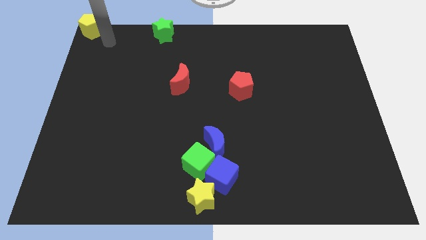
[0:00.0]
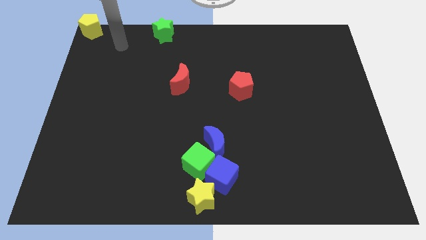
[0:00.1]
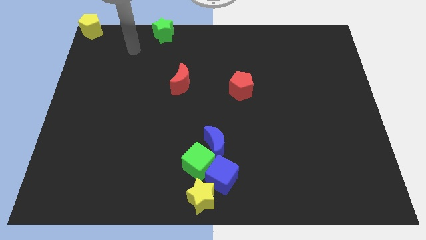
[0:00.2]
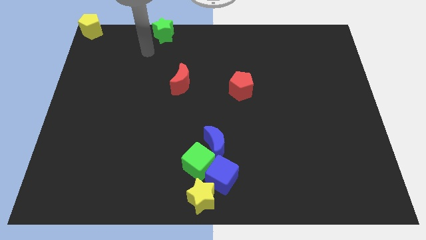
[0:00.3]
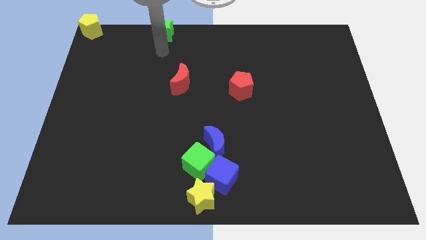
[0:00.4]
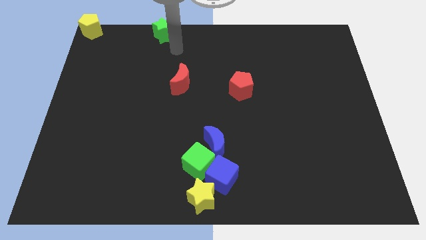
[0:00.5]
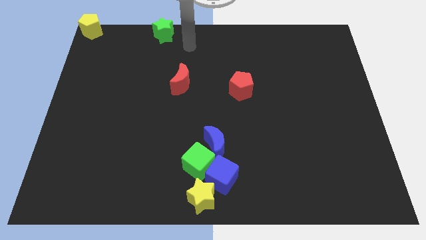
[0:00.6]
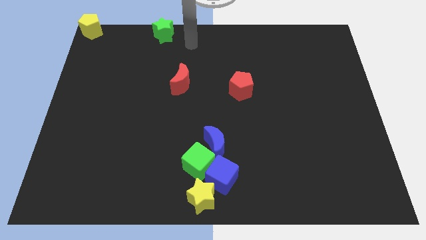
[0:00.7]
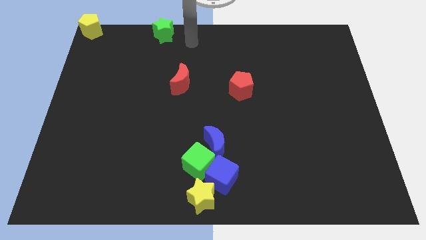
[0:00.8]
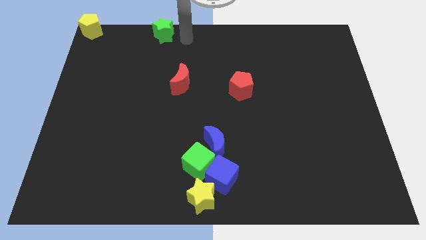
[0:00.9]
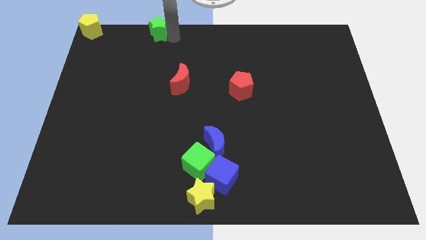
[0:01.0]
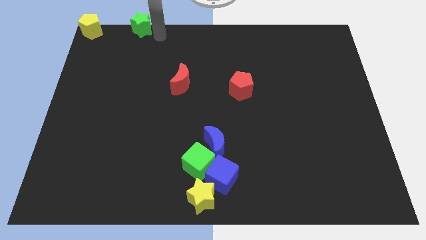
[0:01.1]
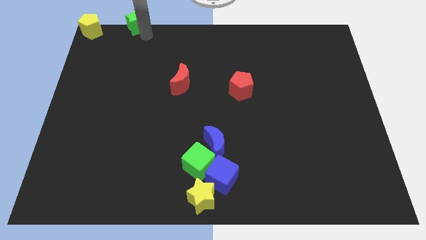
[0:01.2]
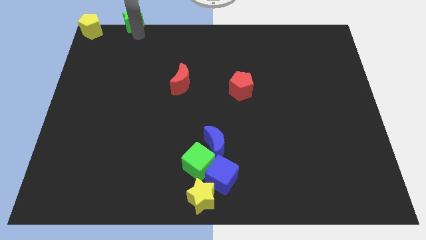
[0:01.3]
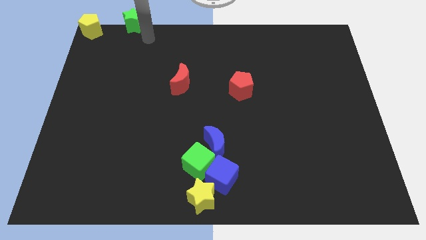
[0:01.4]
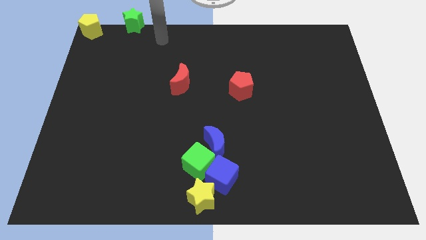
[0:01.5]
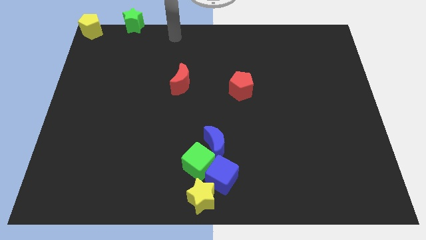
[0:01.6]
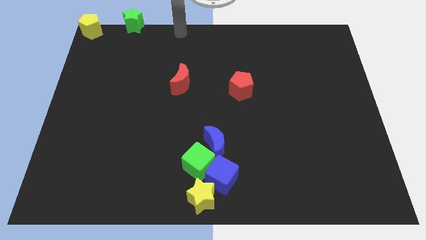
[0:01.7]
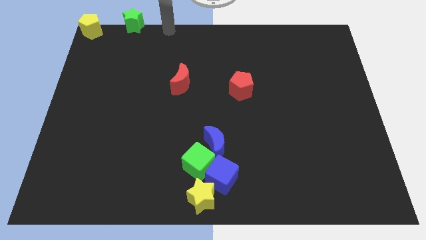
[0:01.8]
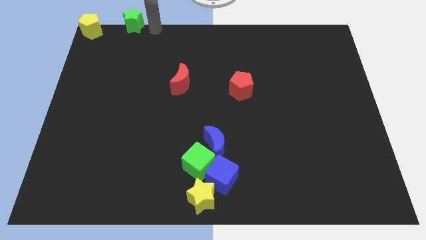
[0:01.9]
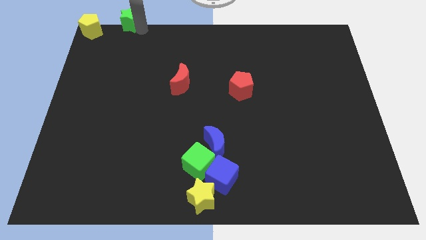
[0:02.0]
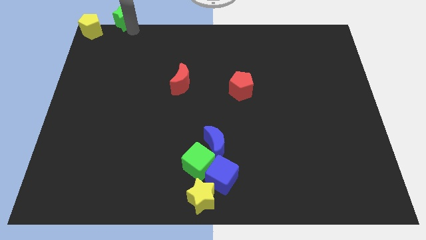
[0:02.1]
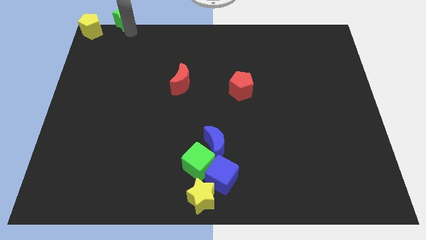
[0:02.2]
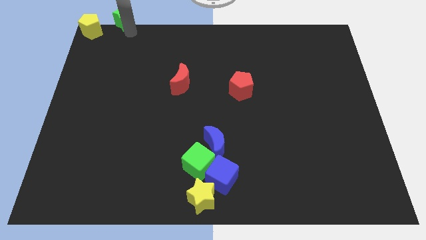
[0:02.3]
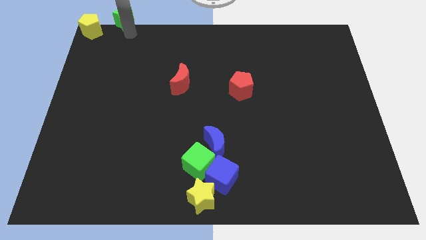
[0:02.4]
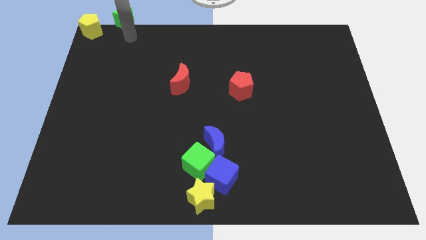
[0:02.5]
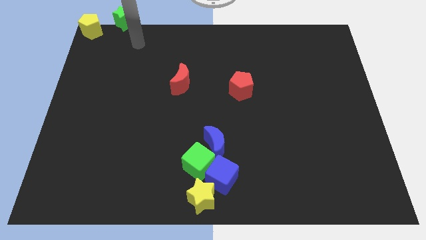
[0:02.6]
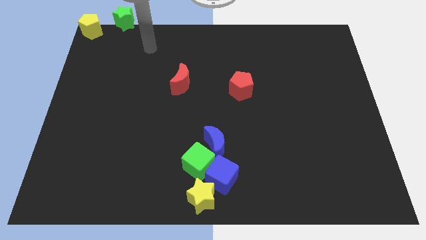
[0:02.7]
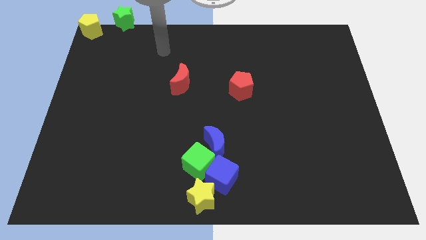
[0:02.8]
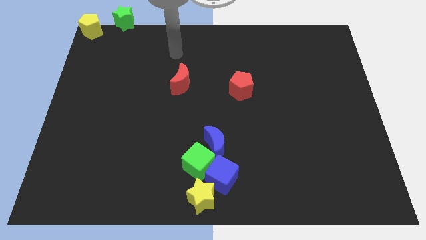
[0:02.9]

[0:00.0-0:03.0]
push the green star to the right of the yellow pentagon

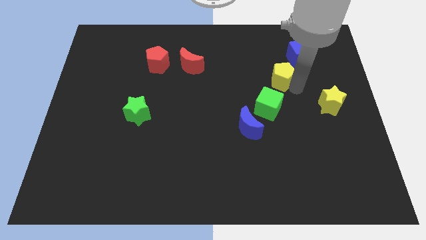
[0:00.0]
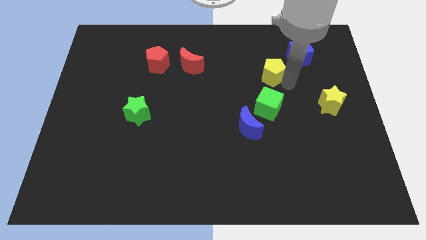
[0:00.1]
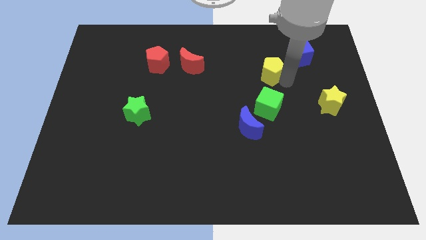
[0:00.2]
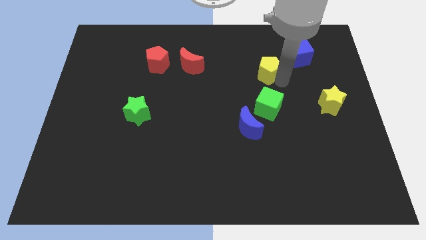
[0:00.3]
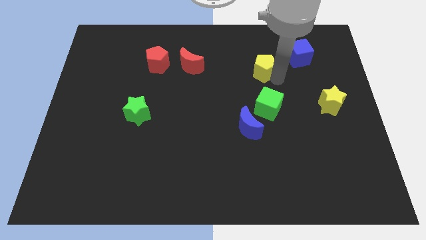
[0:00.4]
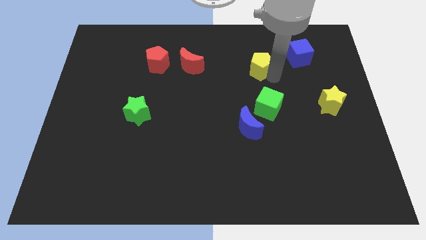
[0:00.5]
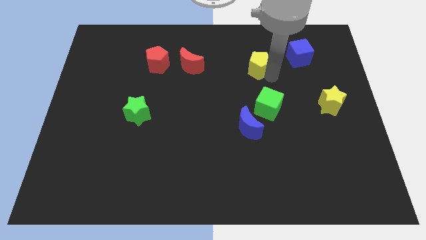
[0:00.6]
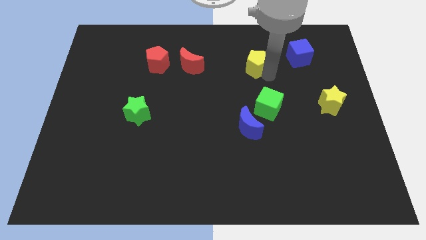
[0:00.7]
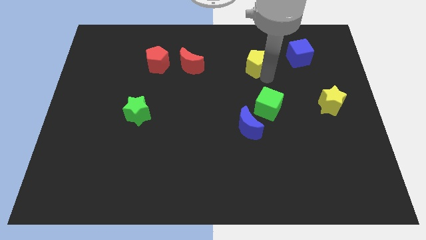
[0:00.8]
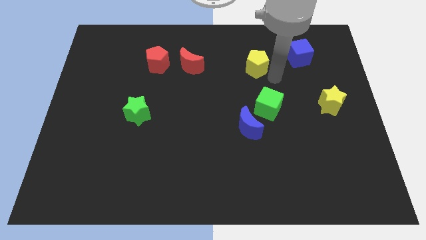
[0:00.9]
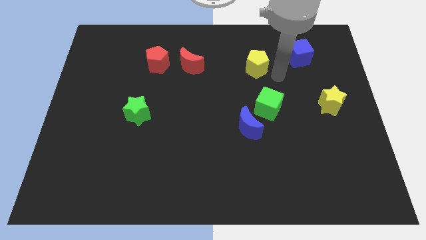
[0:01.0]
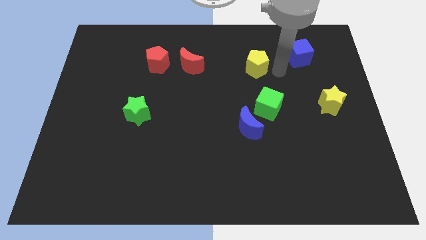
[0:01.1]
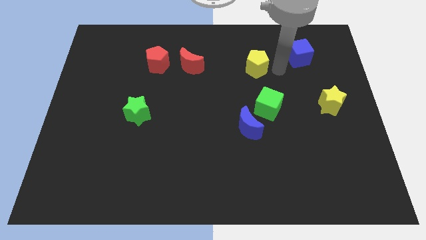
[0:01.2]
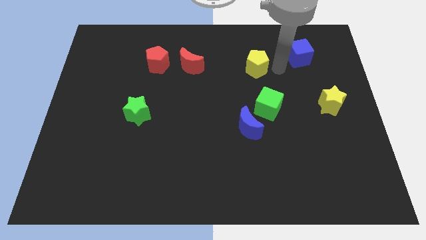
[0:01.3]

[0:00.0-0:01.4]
place the yellow pentagon vertically above the blue moon

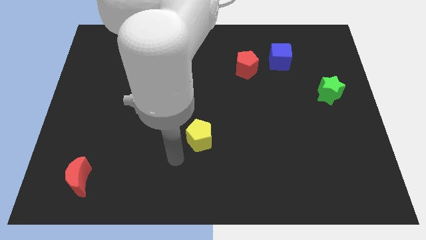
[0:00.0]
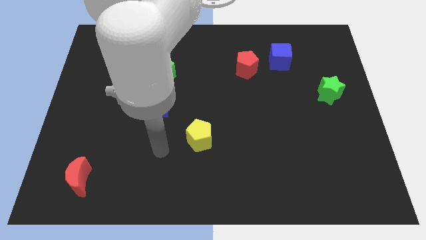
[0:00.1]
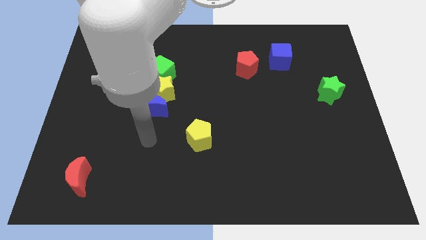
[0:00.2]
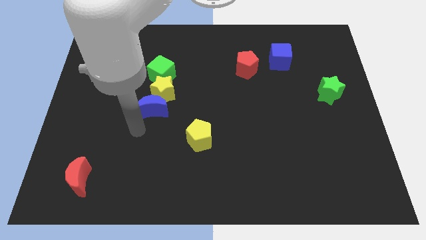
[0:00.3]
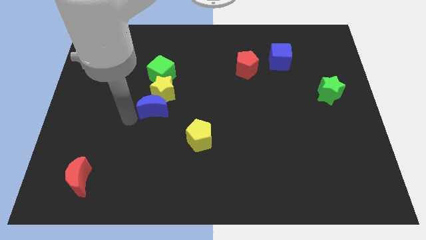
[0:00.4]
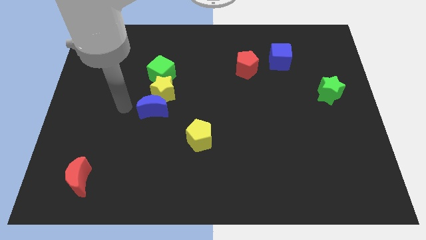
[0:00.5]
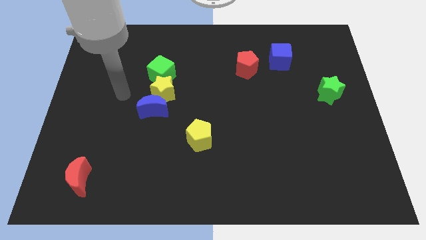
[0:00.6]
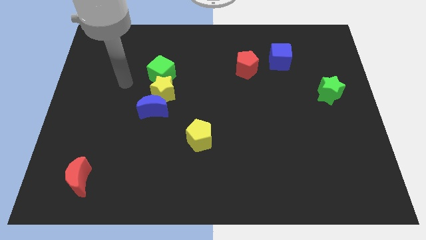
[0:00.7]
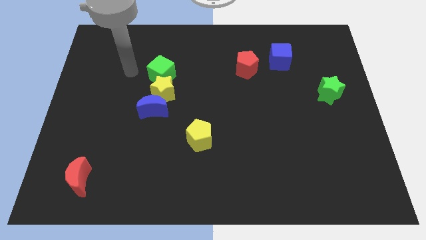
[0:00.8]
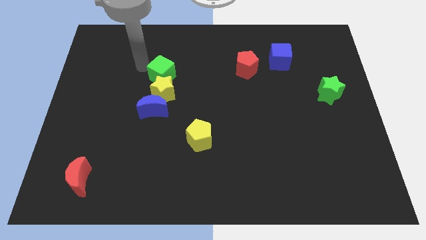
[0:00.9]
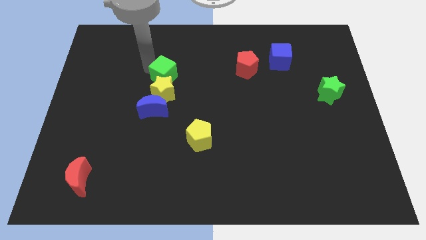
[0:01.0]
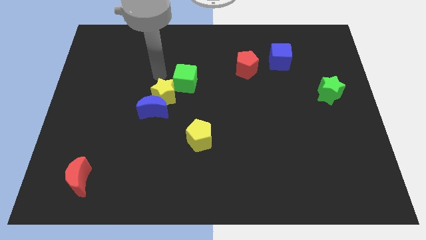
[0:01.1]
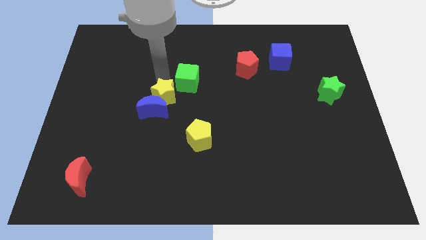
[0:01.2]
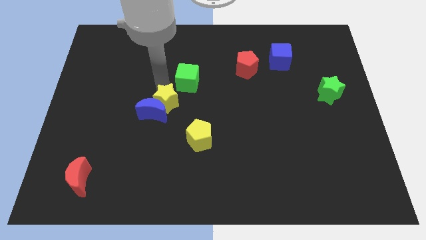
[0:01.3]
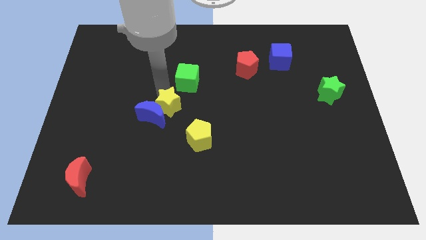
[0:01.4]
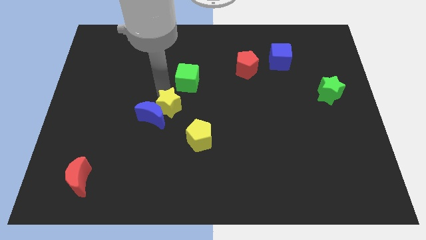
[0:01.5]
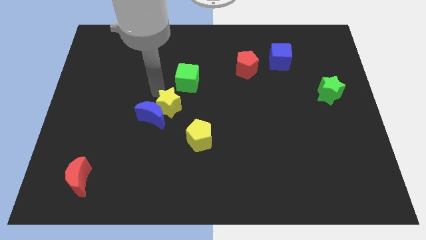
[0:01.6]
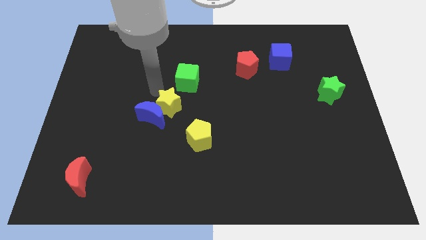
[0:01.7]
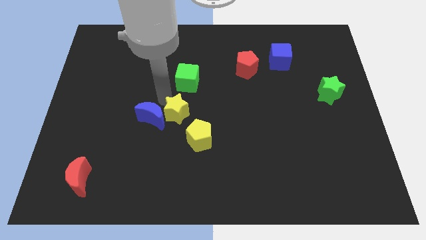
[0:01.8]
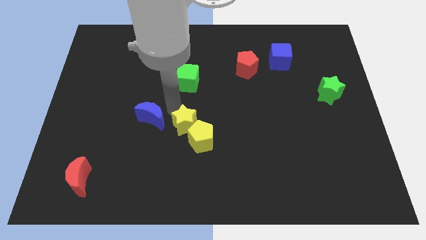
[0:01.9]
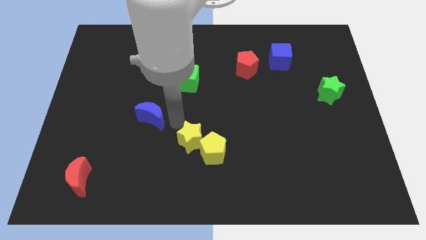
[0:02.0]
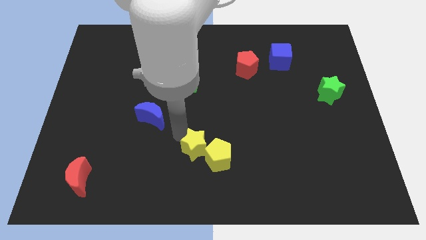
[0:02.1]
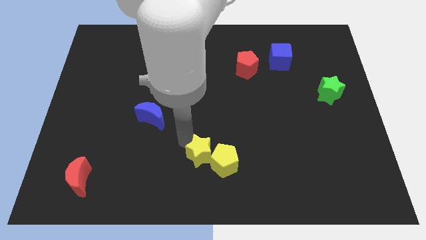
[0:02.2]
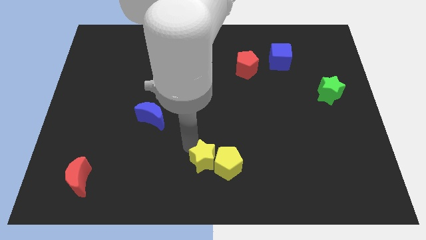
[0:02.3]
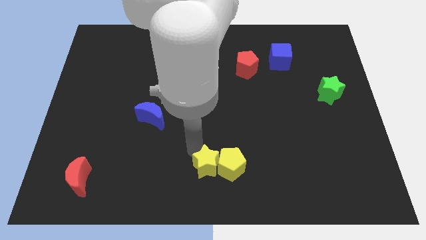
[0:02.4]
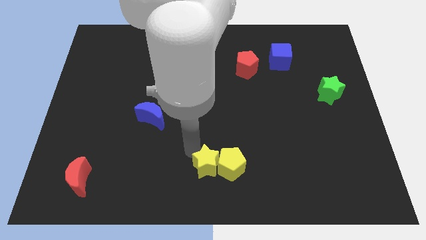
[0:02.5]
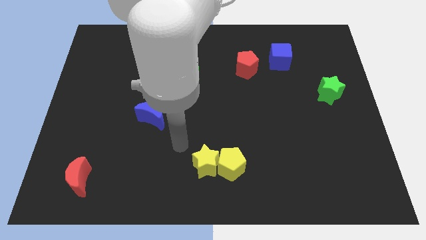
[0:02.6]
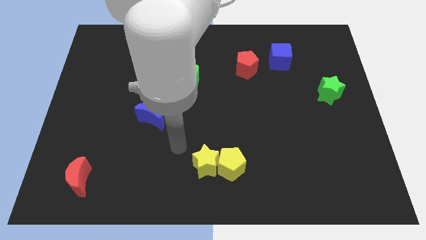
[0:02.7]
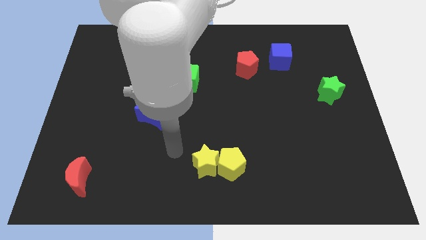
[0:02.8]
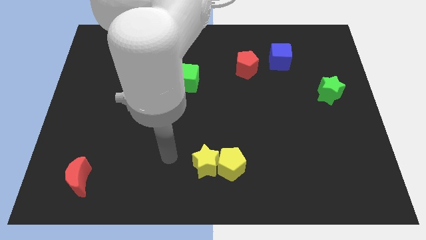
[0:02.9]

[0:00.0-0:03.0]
drag the yellow blocks towards the bottom center

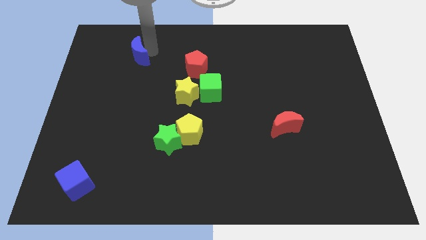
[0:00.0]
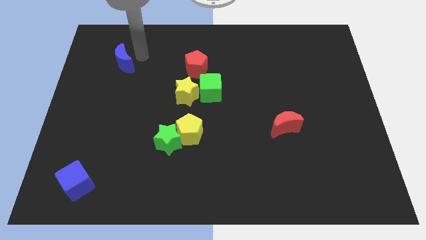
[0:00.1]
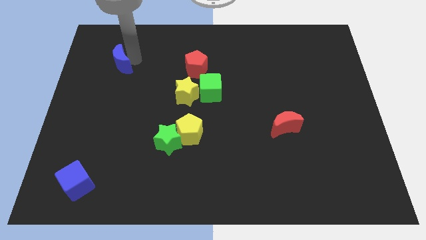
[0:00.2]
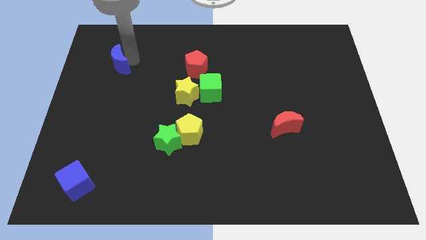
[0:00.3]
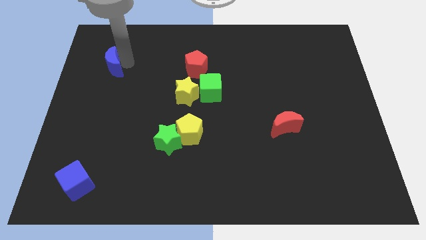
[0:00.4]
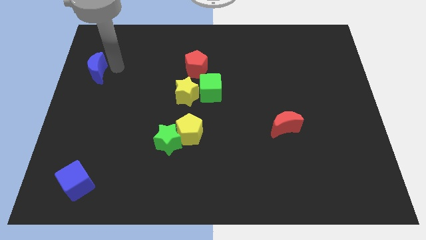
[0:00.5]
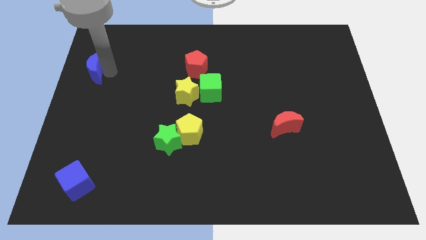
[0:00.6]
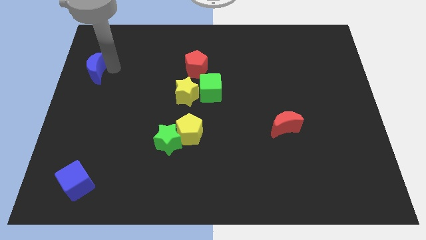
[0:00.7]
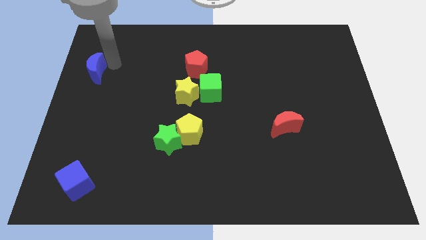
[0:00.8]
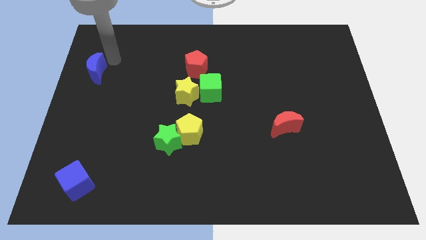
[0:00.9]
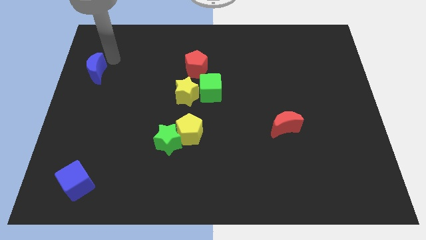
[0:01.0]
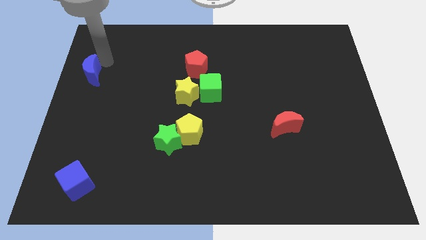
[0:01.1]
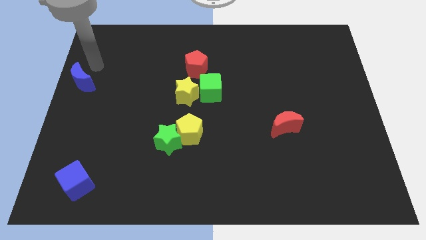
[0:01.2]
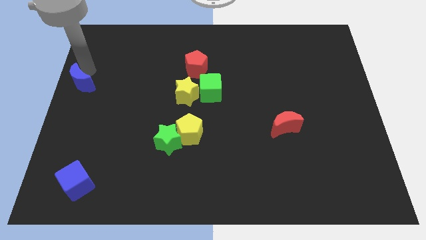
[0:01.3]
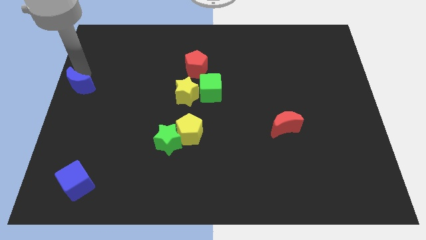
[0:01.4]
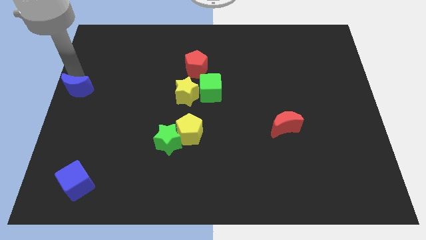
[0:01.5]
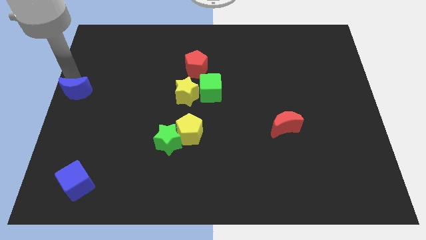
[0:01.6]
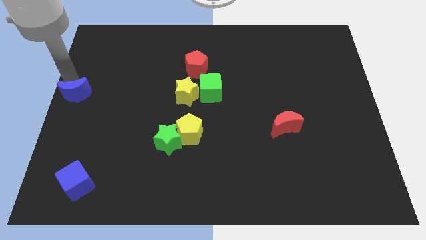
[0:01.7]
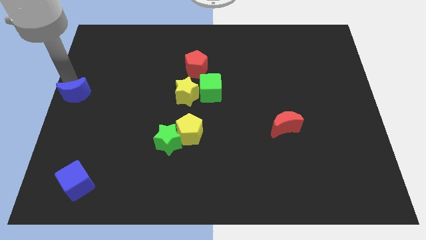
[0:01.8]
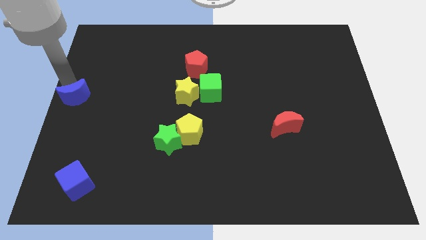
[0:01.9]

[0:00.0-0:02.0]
place the blue crescent at the center left of the board
